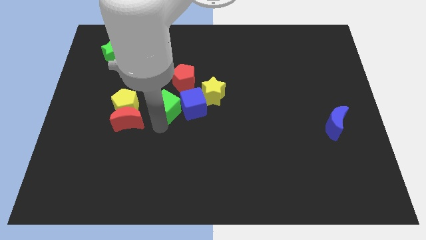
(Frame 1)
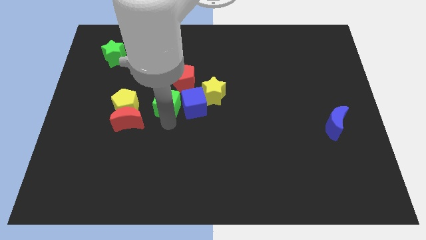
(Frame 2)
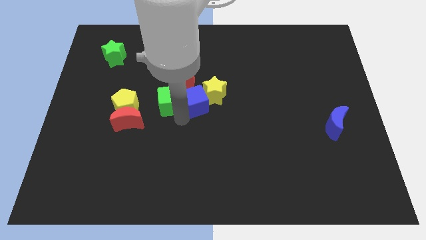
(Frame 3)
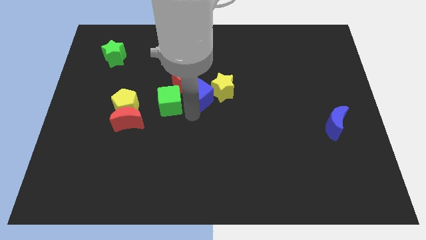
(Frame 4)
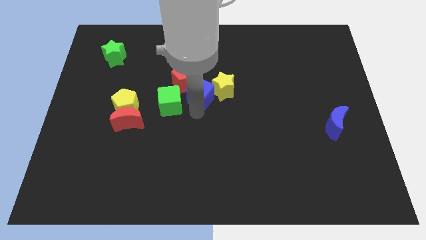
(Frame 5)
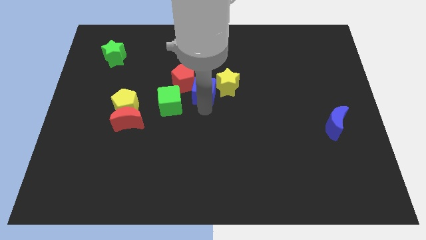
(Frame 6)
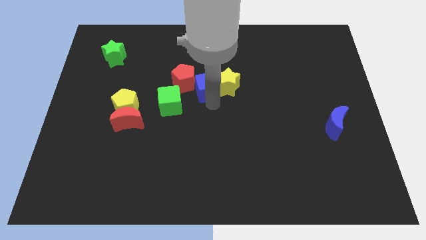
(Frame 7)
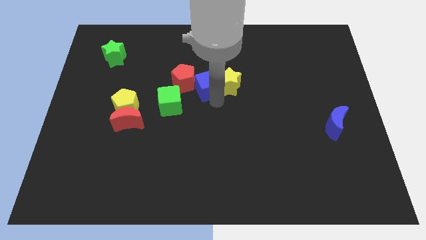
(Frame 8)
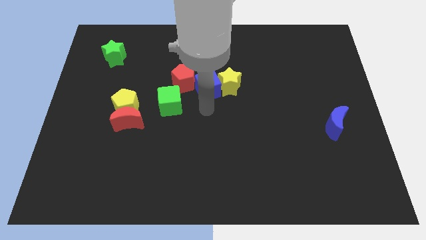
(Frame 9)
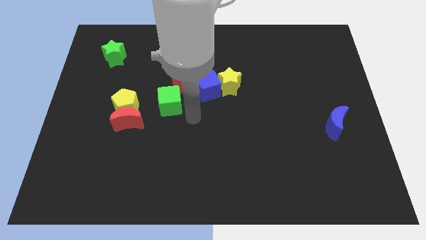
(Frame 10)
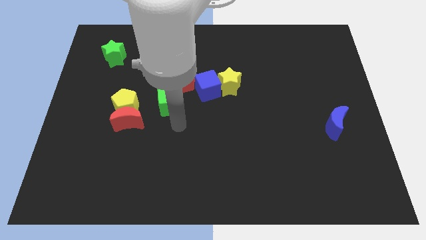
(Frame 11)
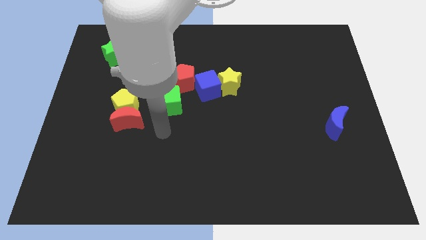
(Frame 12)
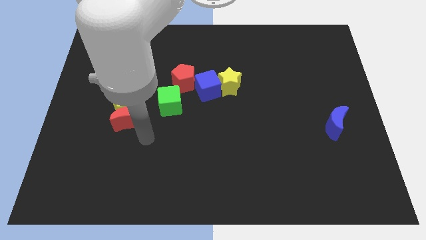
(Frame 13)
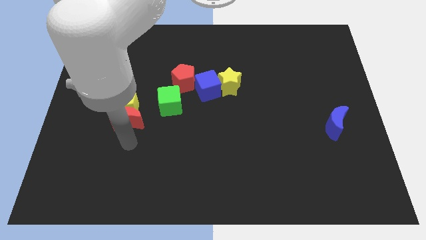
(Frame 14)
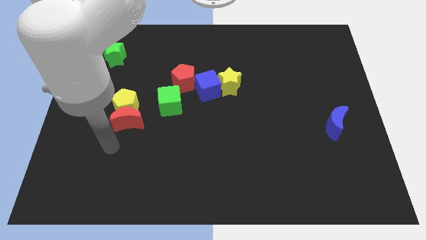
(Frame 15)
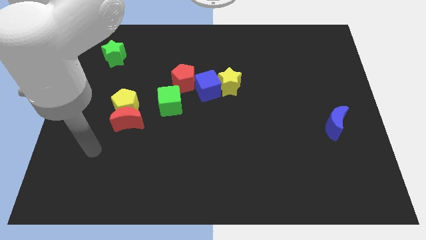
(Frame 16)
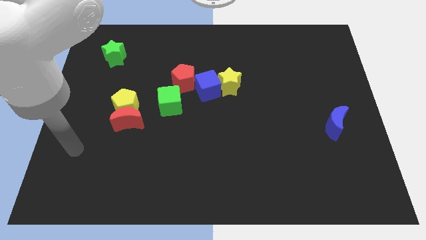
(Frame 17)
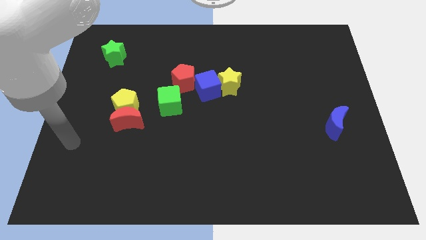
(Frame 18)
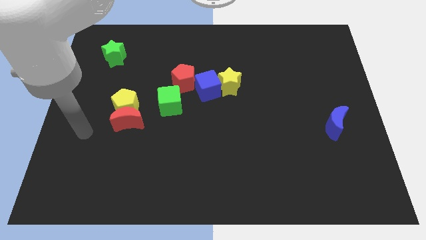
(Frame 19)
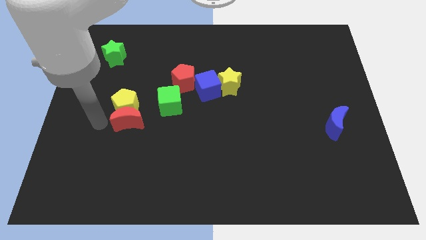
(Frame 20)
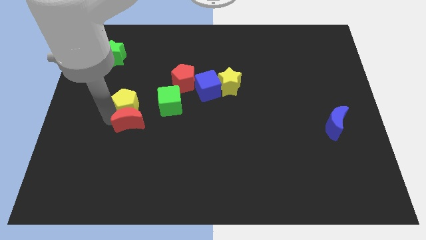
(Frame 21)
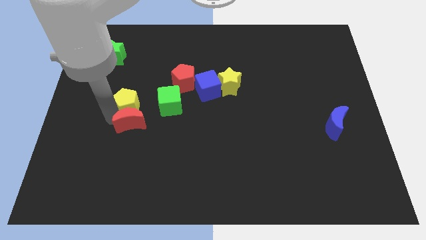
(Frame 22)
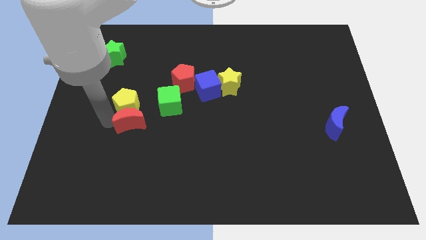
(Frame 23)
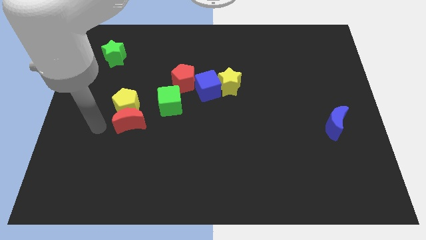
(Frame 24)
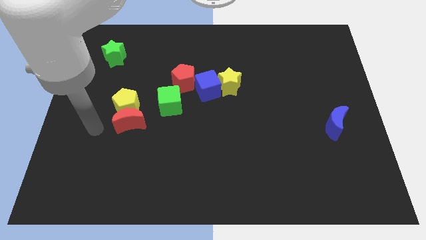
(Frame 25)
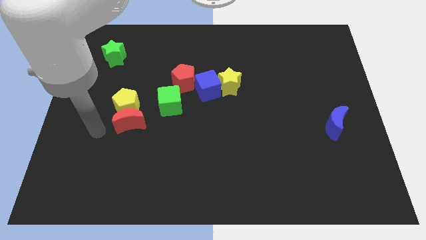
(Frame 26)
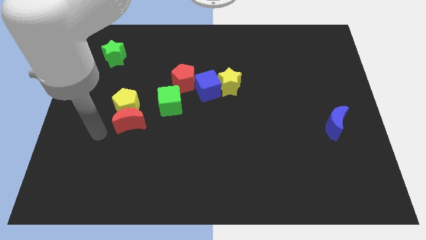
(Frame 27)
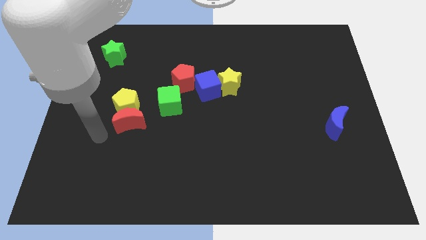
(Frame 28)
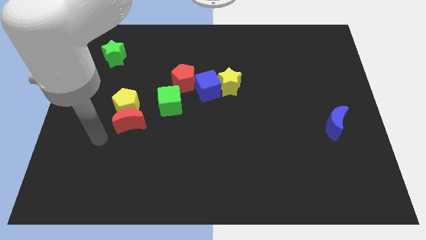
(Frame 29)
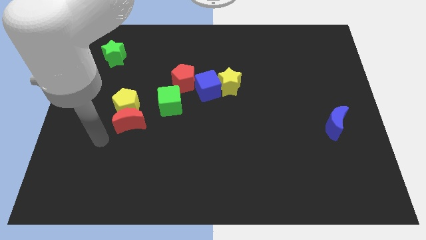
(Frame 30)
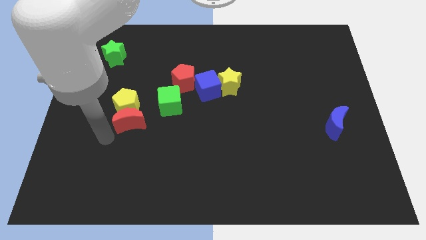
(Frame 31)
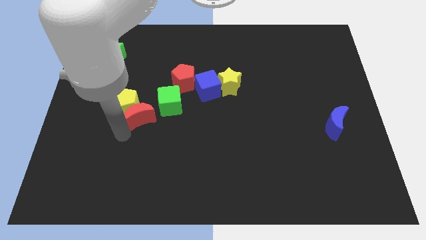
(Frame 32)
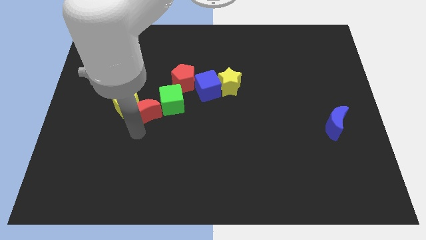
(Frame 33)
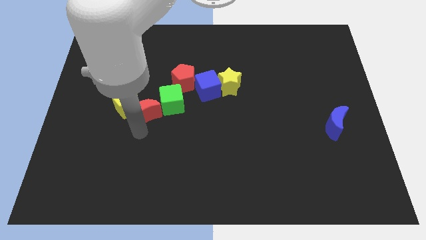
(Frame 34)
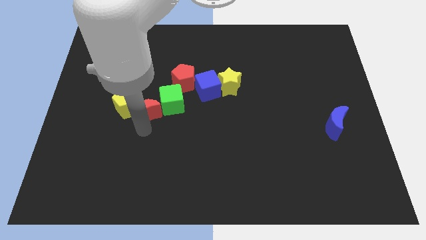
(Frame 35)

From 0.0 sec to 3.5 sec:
place red moon in between green cube and yellow pentagon

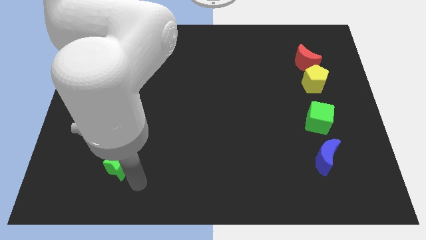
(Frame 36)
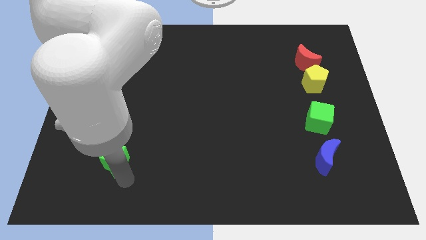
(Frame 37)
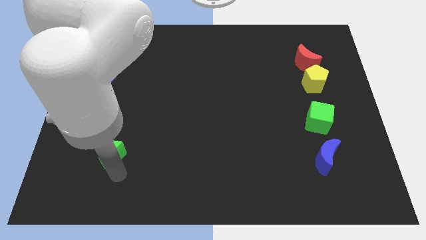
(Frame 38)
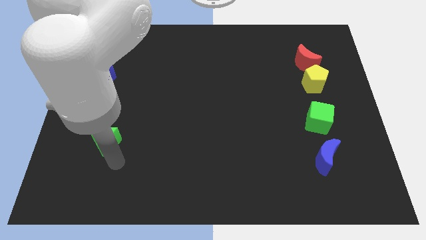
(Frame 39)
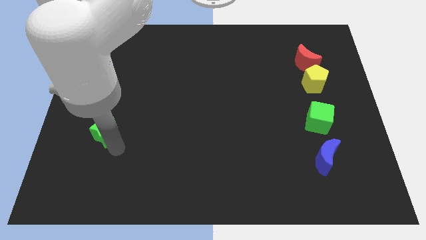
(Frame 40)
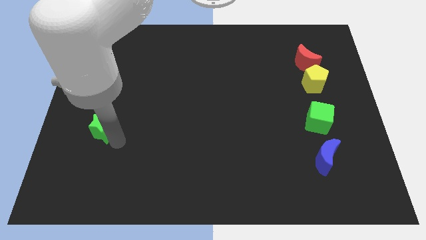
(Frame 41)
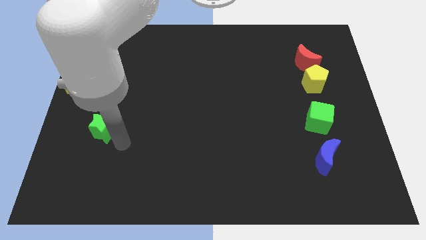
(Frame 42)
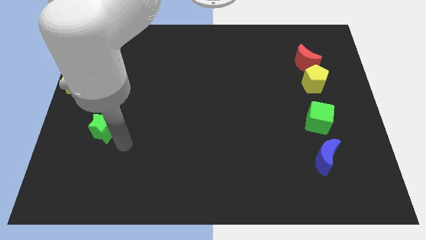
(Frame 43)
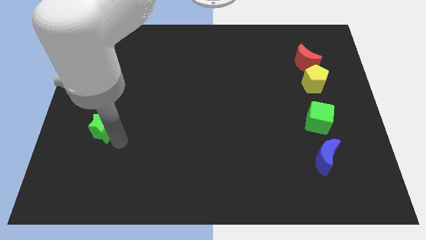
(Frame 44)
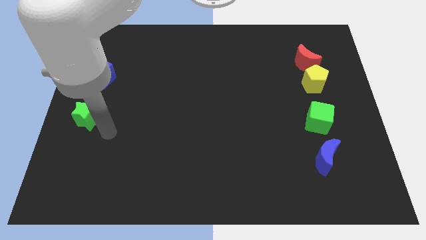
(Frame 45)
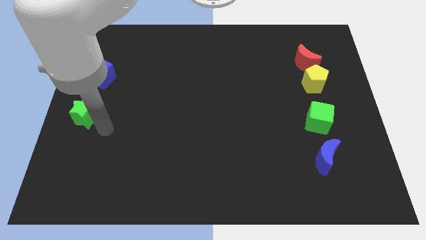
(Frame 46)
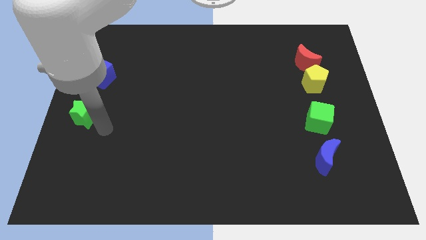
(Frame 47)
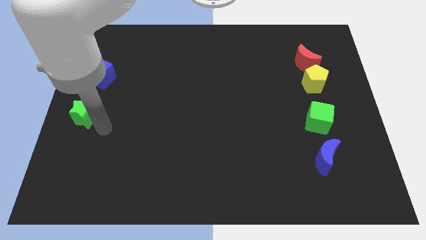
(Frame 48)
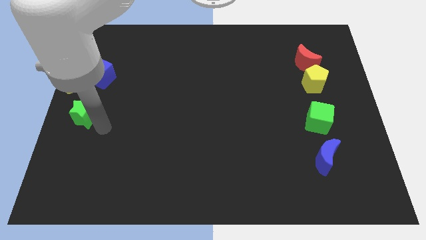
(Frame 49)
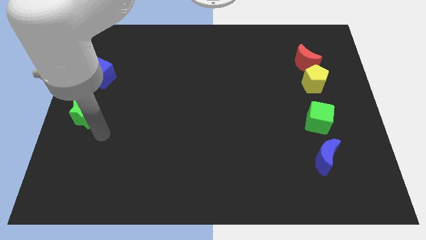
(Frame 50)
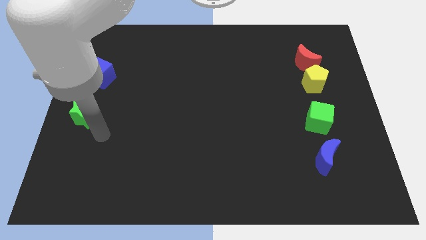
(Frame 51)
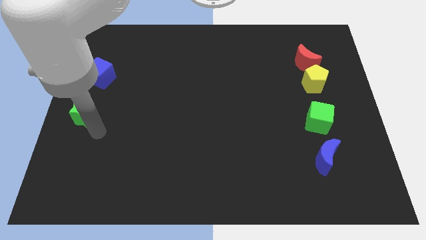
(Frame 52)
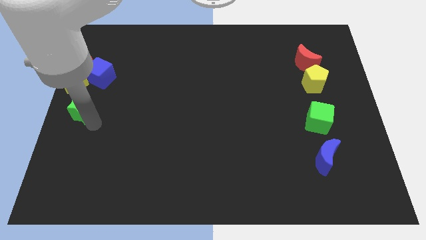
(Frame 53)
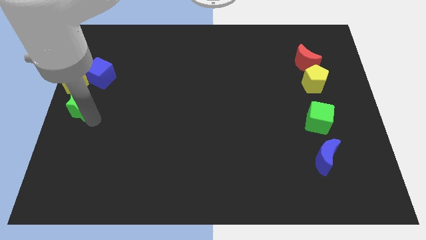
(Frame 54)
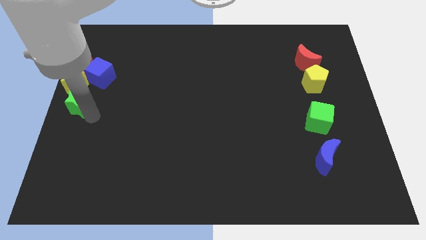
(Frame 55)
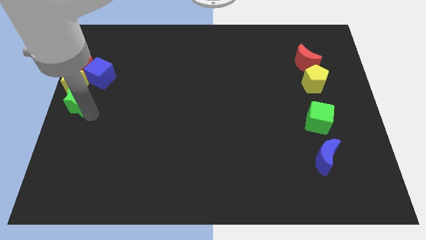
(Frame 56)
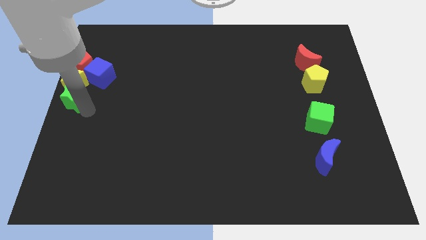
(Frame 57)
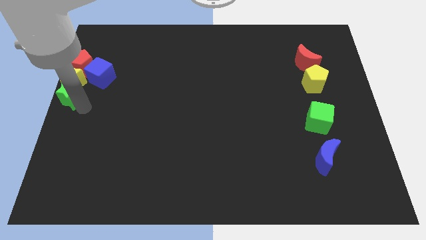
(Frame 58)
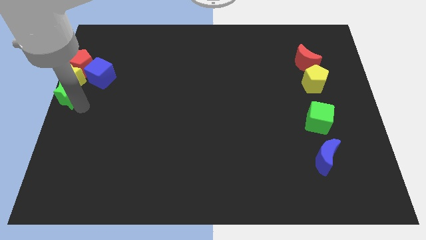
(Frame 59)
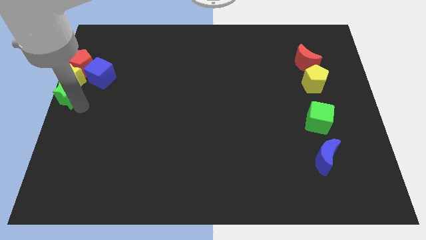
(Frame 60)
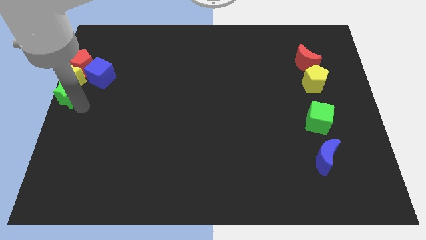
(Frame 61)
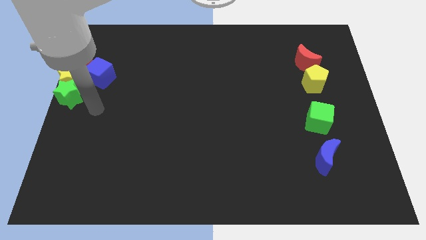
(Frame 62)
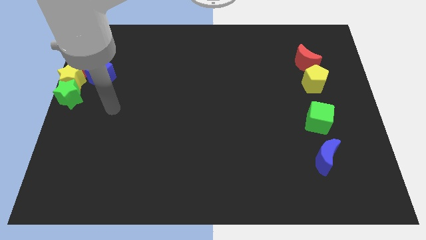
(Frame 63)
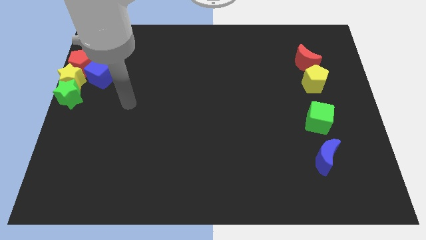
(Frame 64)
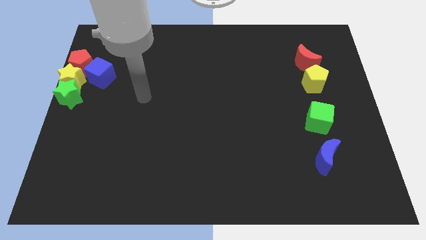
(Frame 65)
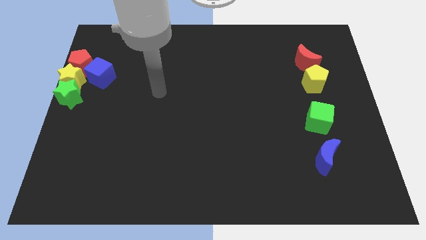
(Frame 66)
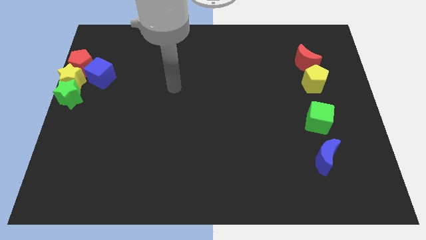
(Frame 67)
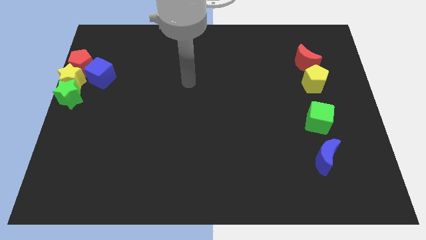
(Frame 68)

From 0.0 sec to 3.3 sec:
put the green star below the yellow star

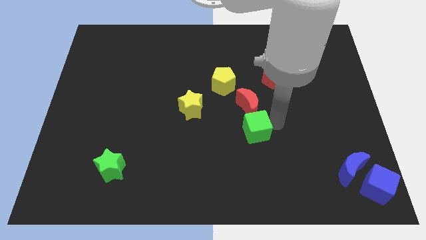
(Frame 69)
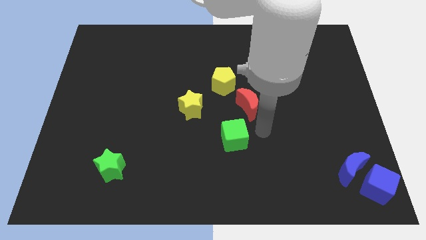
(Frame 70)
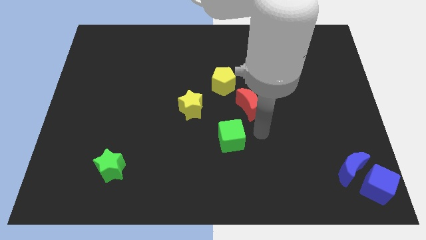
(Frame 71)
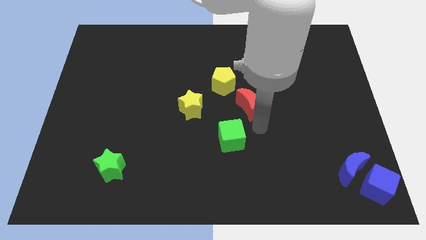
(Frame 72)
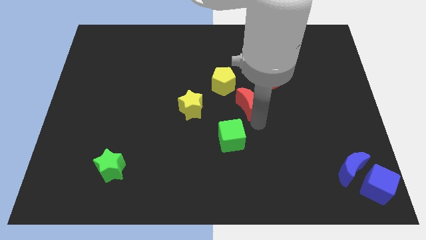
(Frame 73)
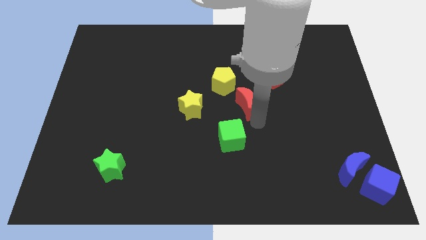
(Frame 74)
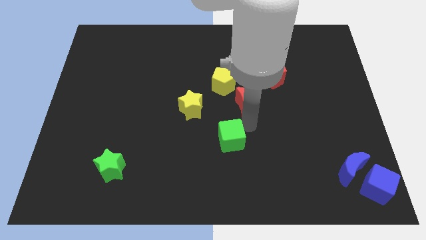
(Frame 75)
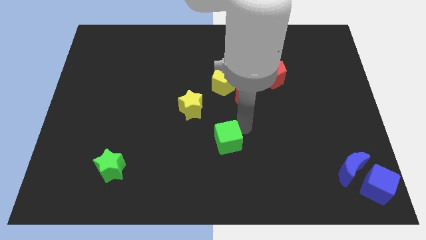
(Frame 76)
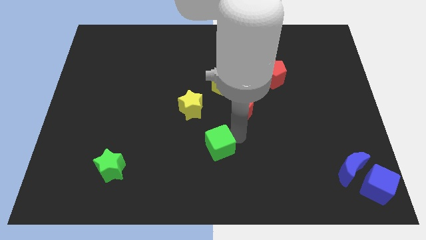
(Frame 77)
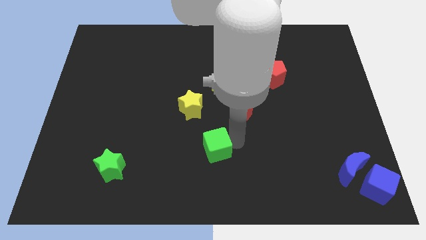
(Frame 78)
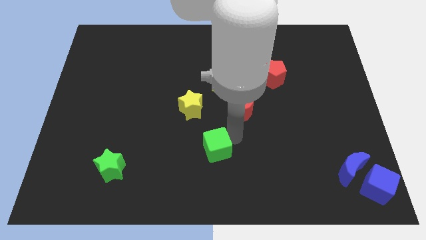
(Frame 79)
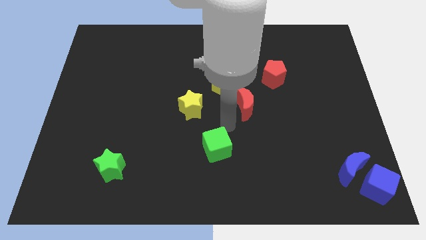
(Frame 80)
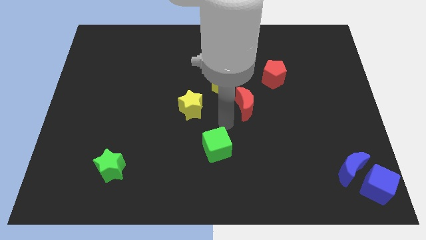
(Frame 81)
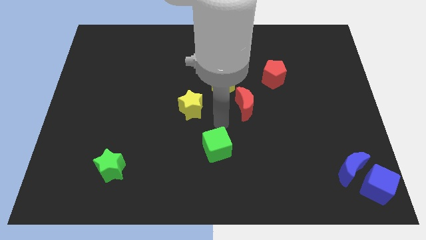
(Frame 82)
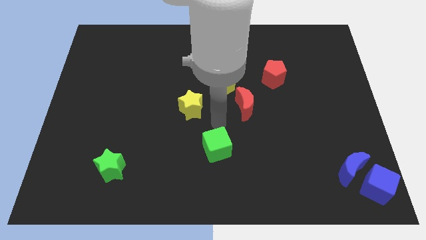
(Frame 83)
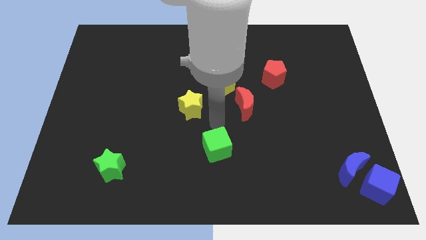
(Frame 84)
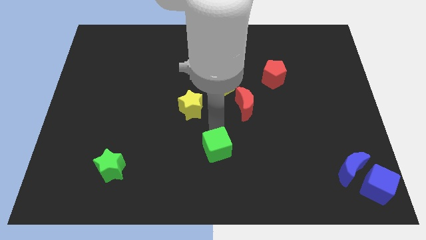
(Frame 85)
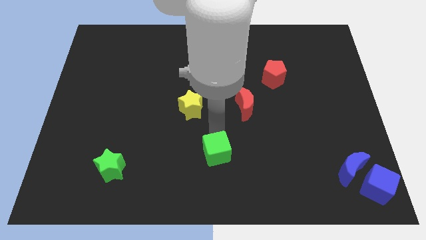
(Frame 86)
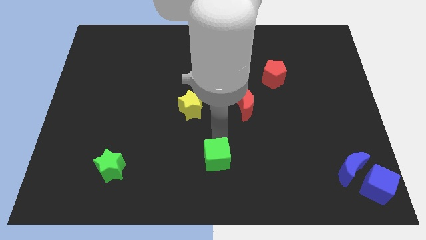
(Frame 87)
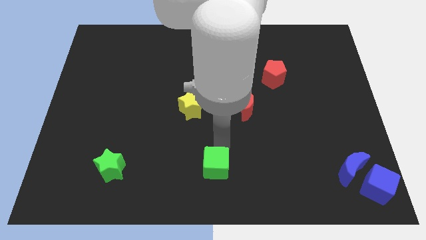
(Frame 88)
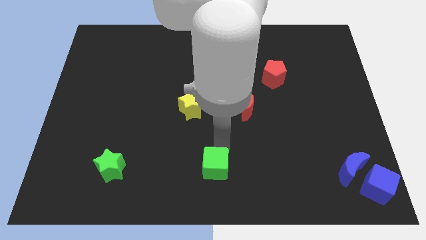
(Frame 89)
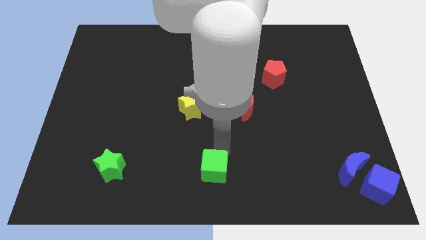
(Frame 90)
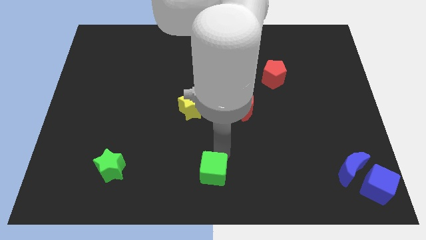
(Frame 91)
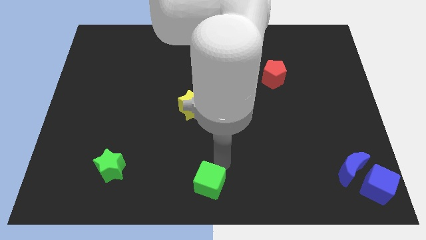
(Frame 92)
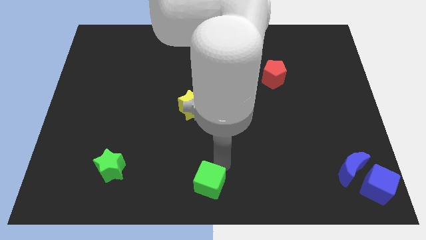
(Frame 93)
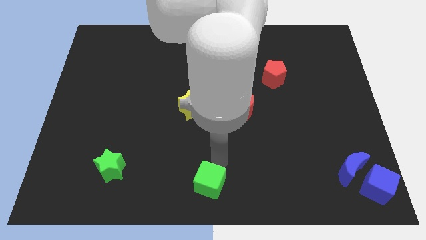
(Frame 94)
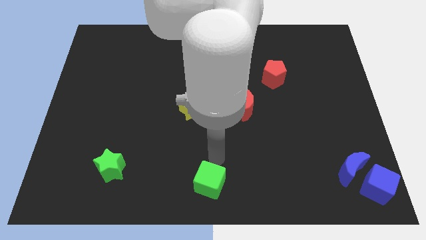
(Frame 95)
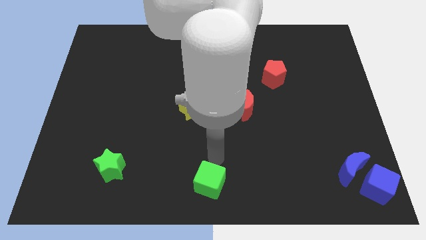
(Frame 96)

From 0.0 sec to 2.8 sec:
move the green cube to the bottom right of the yellow star
